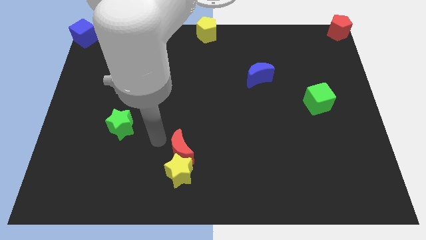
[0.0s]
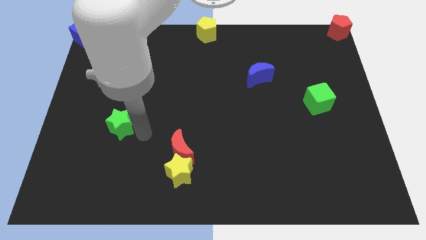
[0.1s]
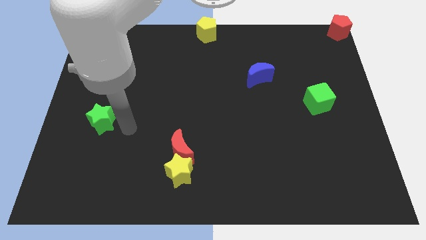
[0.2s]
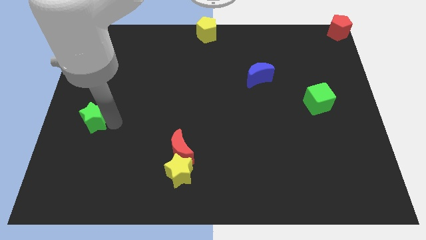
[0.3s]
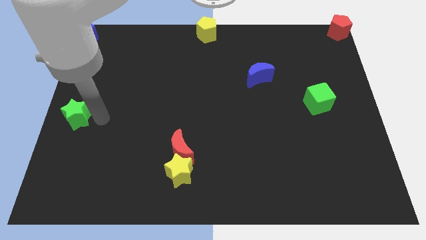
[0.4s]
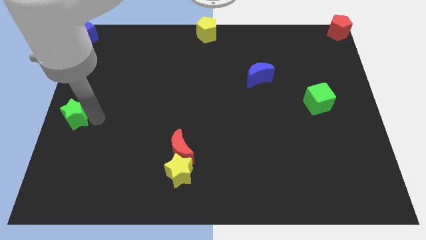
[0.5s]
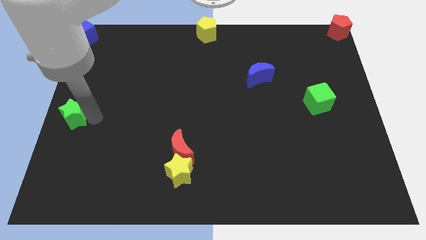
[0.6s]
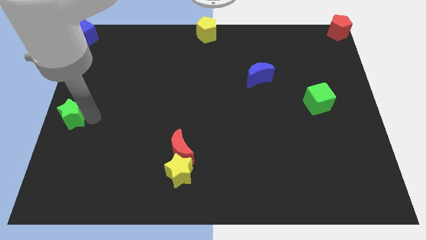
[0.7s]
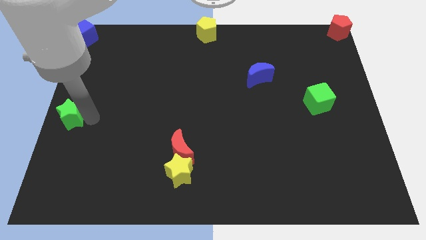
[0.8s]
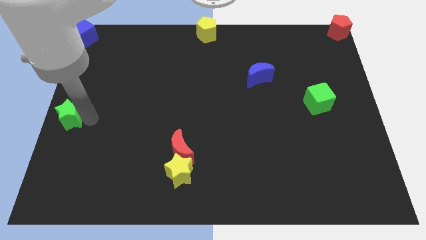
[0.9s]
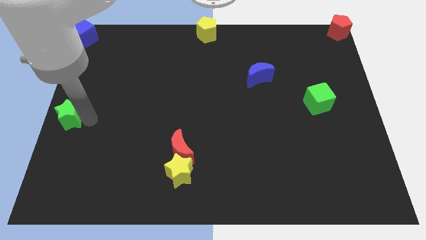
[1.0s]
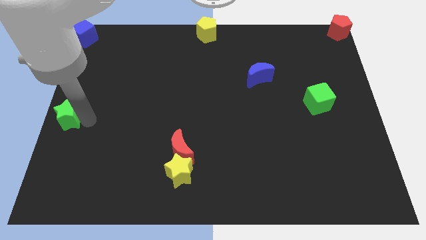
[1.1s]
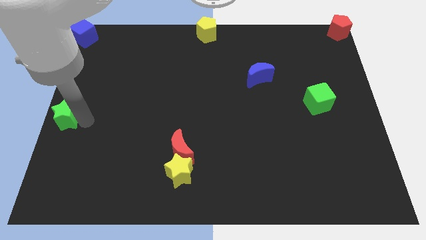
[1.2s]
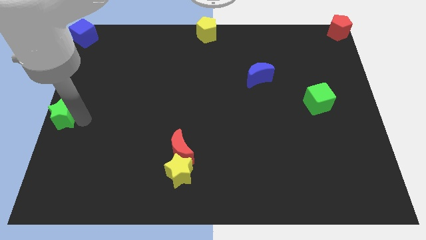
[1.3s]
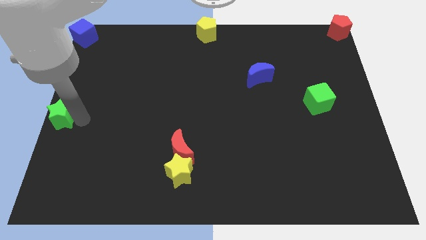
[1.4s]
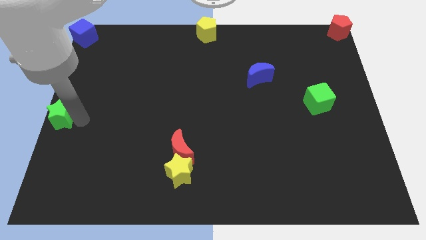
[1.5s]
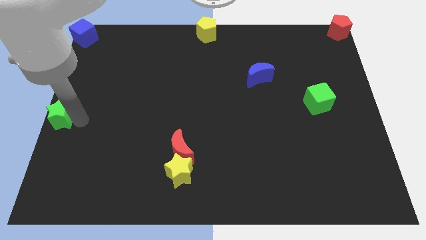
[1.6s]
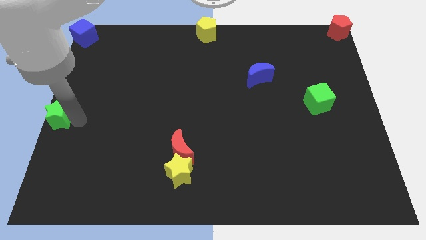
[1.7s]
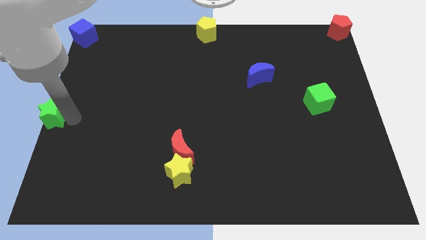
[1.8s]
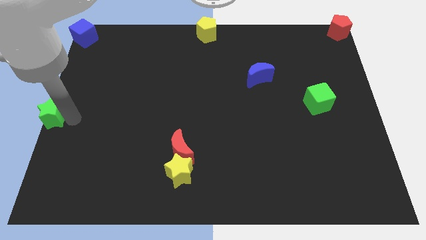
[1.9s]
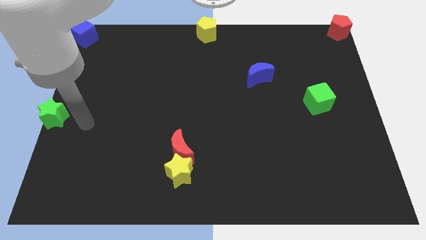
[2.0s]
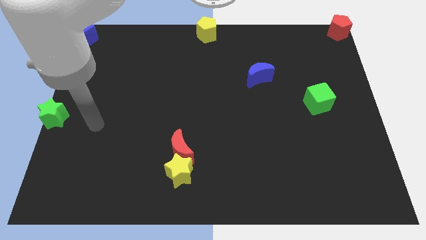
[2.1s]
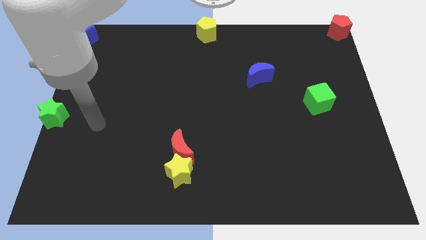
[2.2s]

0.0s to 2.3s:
push the green star to the center left of the board

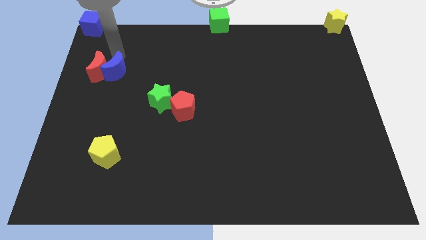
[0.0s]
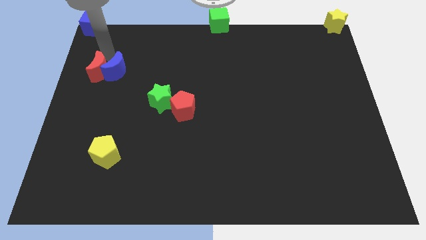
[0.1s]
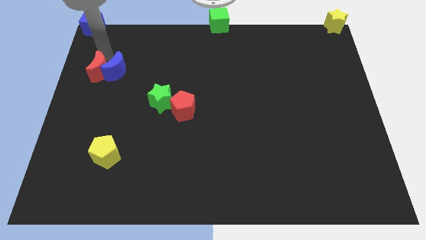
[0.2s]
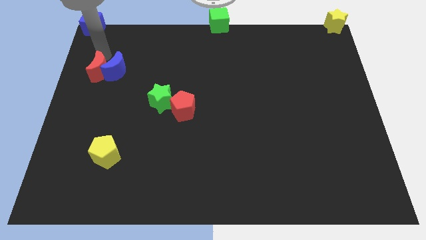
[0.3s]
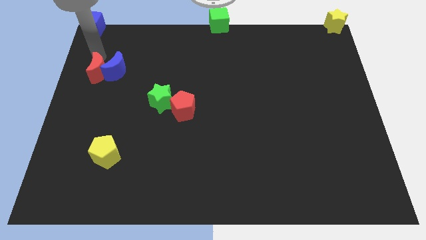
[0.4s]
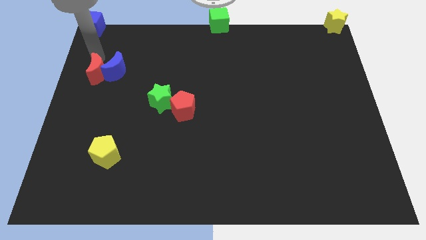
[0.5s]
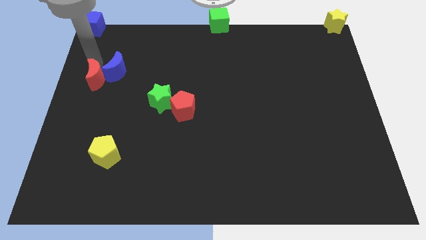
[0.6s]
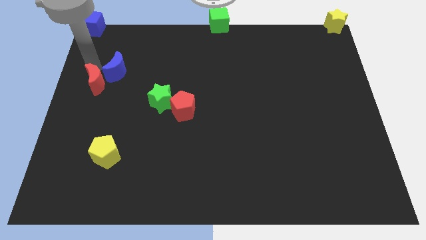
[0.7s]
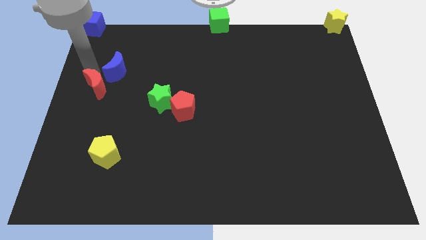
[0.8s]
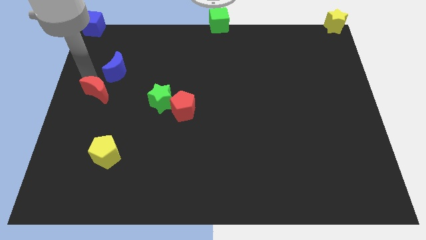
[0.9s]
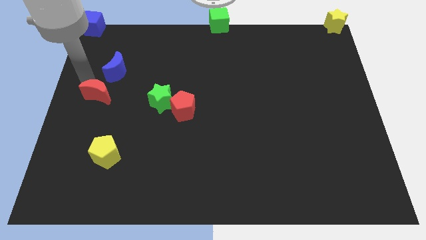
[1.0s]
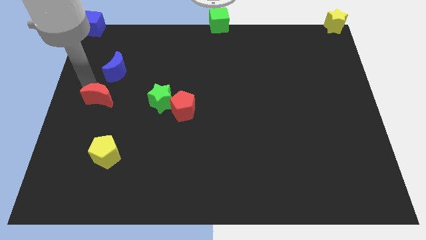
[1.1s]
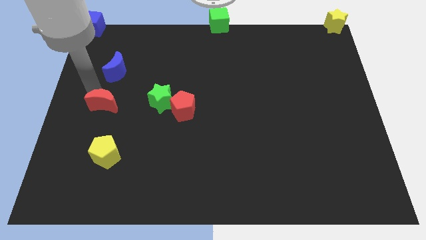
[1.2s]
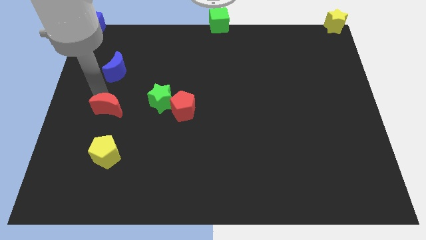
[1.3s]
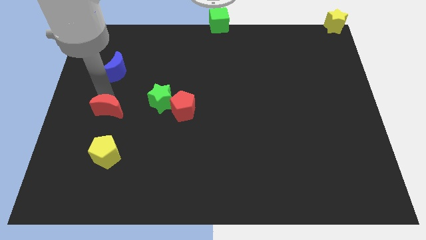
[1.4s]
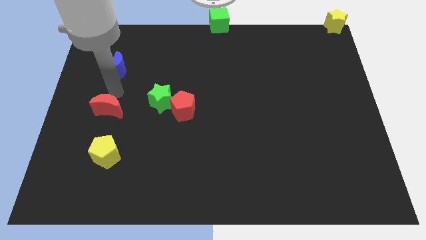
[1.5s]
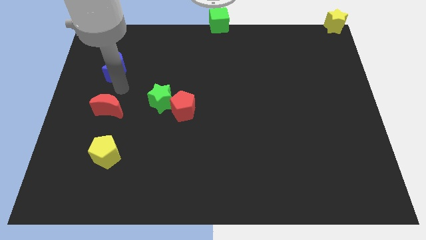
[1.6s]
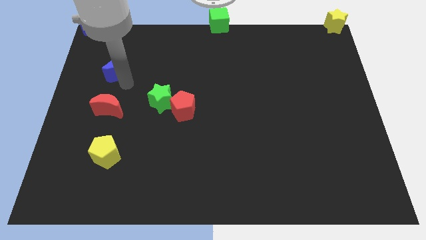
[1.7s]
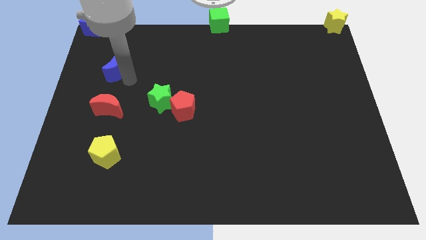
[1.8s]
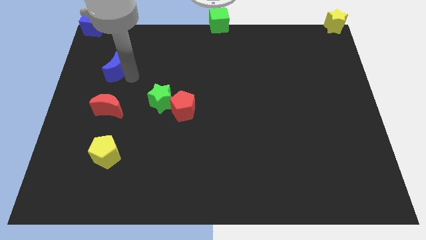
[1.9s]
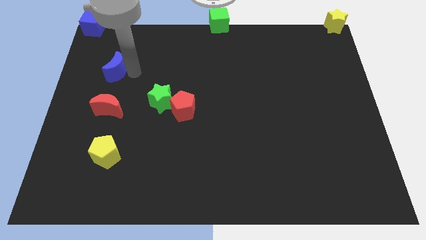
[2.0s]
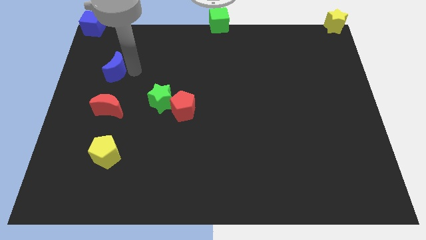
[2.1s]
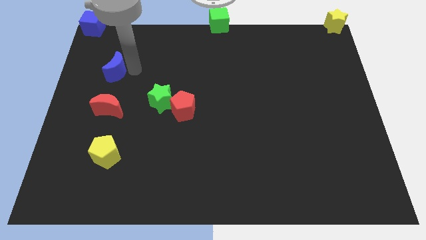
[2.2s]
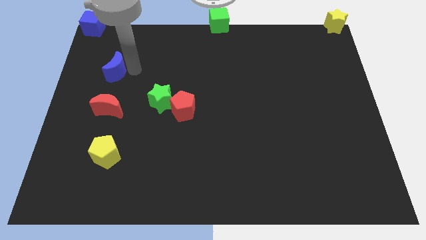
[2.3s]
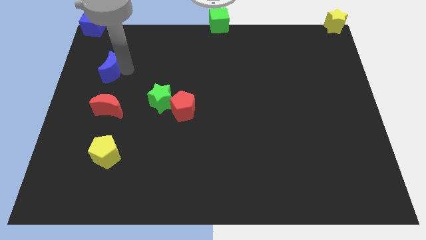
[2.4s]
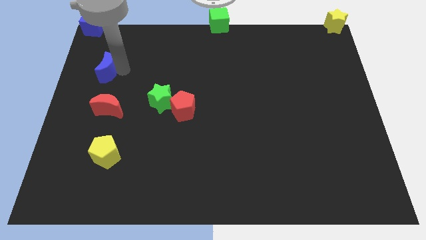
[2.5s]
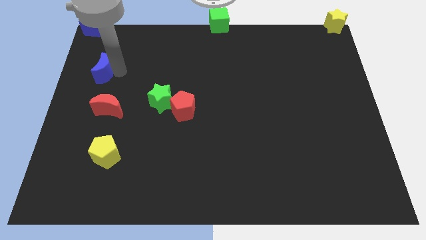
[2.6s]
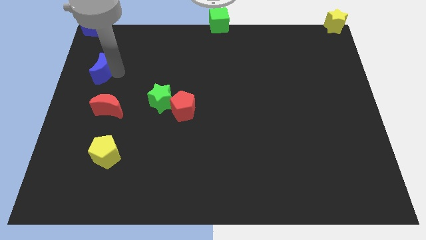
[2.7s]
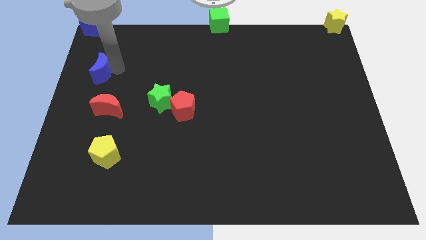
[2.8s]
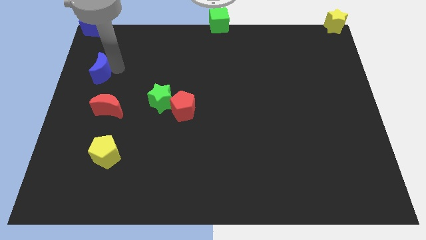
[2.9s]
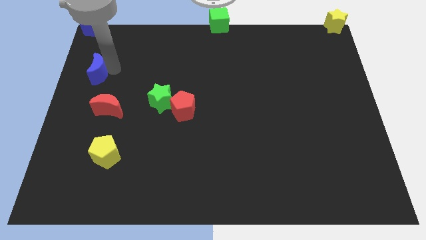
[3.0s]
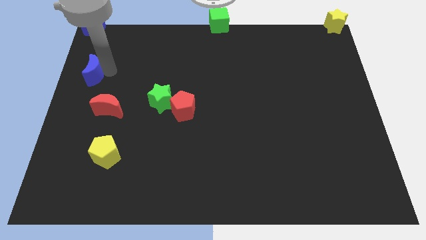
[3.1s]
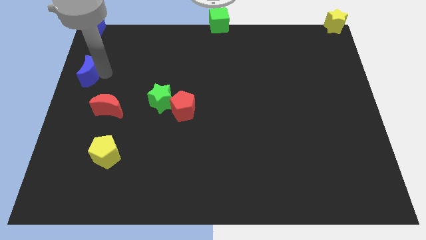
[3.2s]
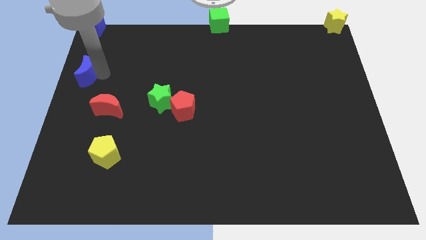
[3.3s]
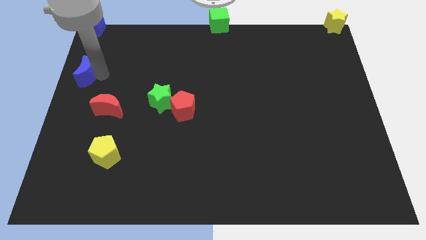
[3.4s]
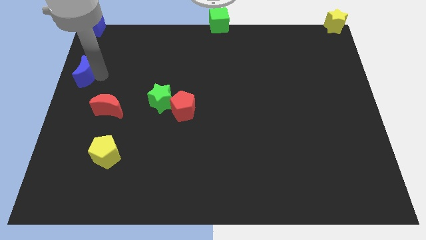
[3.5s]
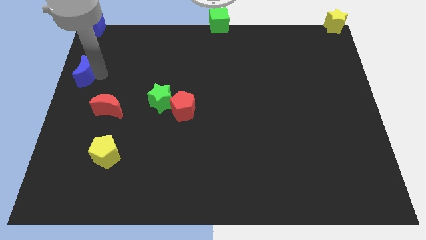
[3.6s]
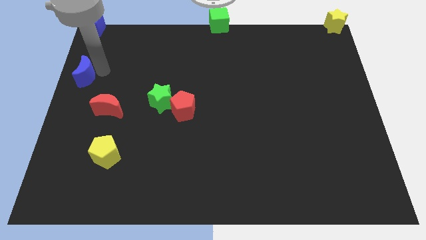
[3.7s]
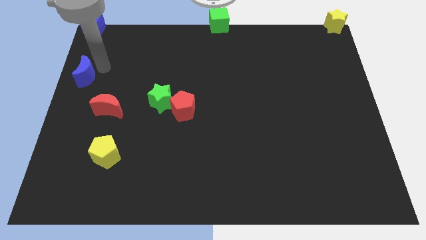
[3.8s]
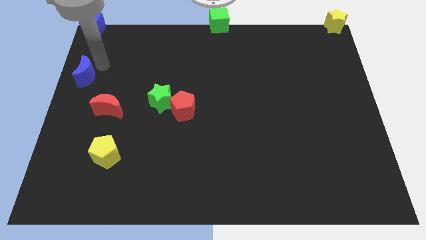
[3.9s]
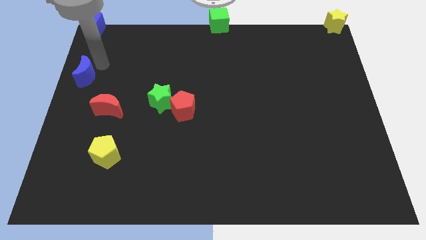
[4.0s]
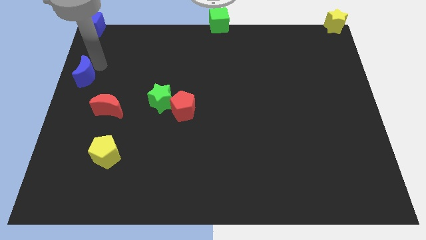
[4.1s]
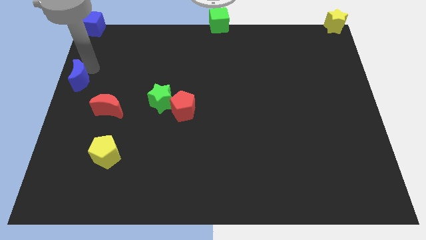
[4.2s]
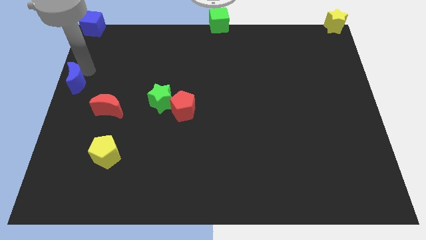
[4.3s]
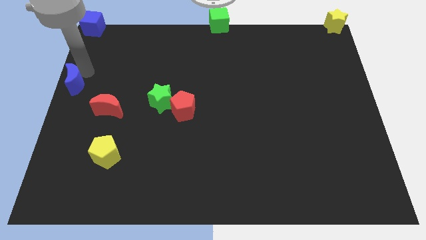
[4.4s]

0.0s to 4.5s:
drag the blue moon to the bottom of the blue cube

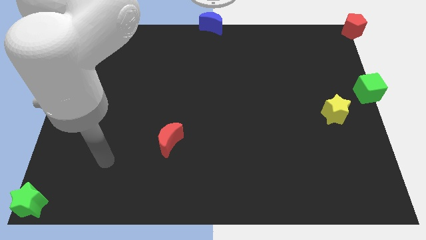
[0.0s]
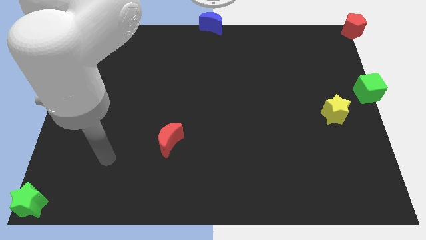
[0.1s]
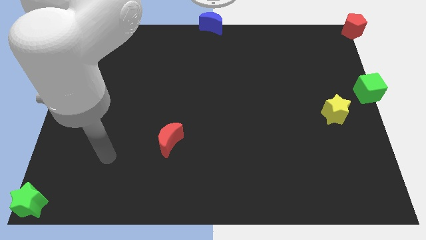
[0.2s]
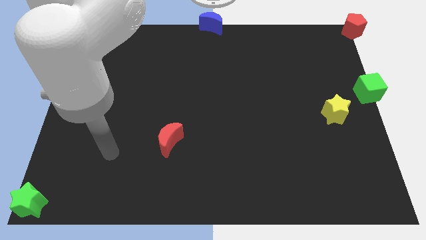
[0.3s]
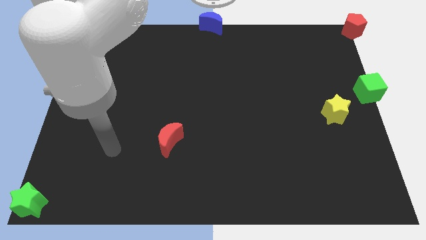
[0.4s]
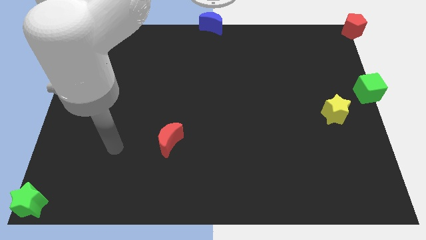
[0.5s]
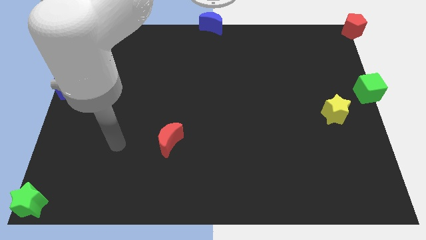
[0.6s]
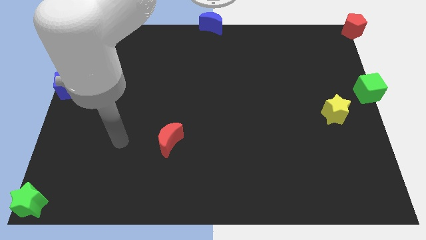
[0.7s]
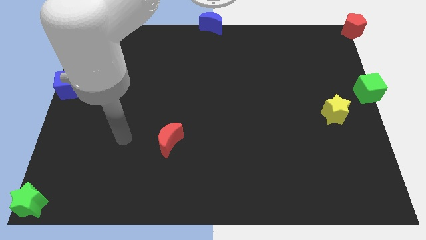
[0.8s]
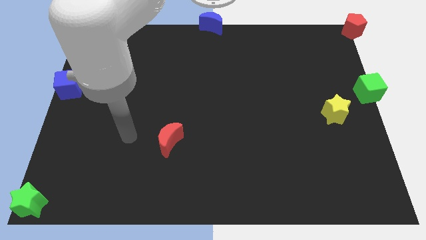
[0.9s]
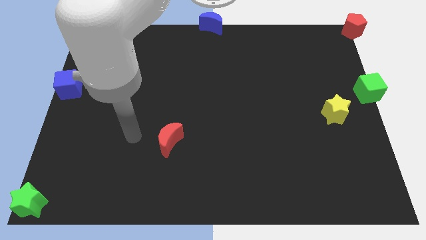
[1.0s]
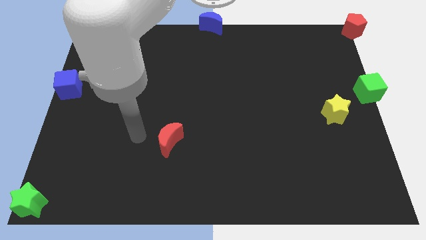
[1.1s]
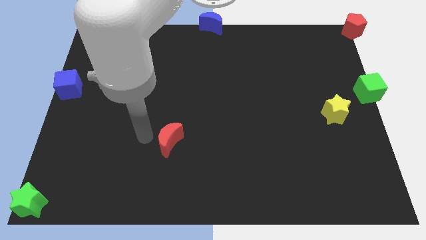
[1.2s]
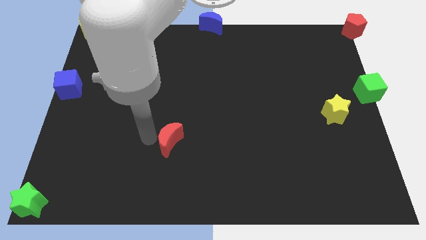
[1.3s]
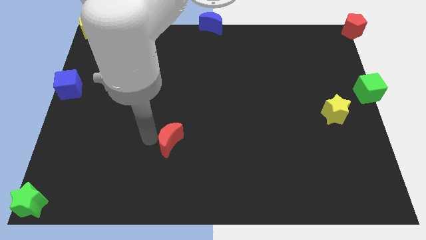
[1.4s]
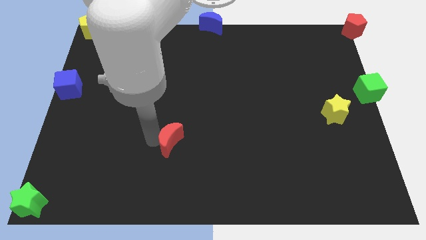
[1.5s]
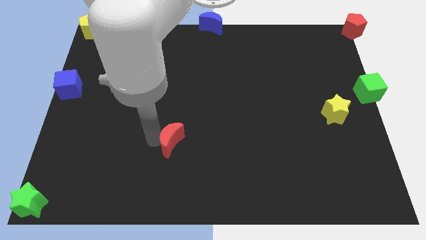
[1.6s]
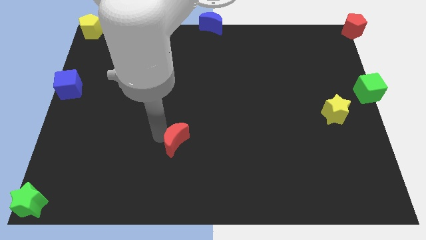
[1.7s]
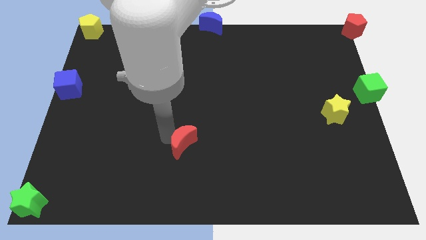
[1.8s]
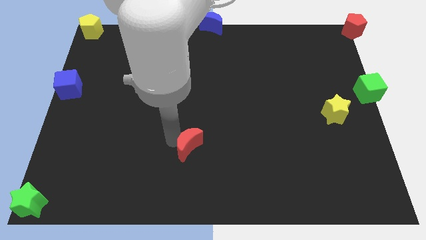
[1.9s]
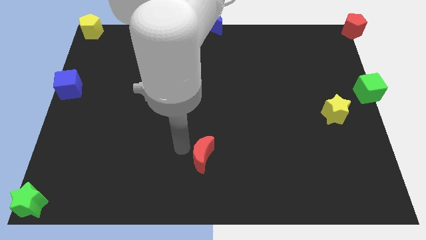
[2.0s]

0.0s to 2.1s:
slide the red moon slightly to the right side of the board

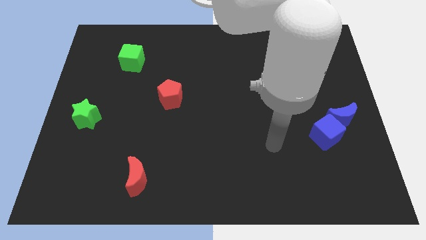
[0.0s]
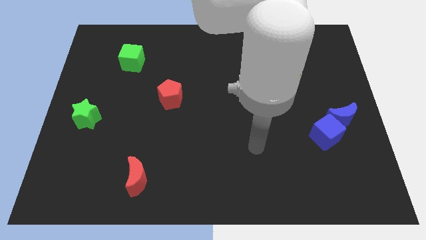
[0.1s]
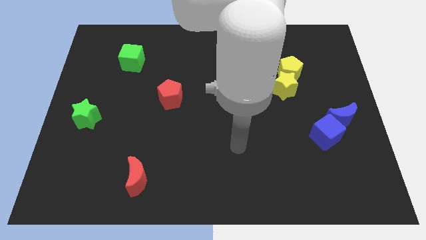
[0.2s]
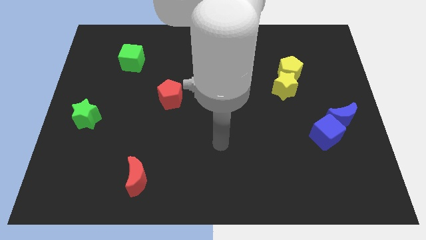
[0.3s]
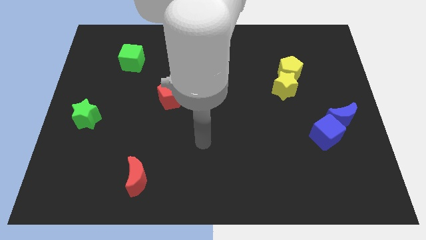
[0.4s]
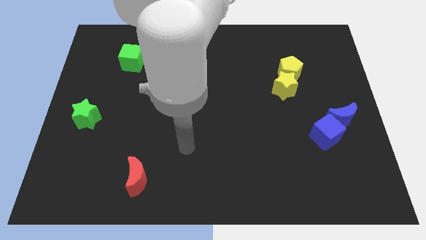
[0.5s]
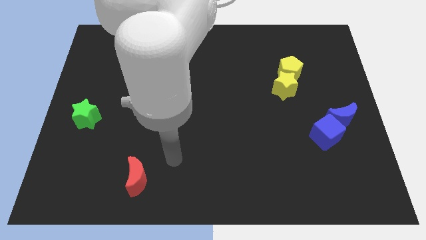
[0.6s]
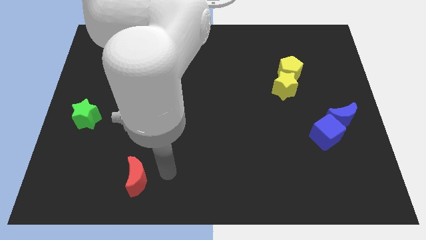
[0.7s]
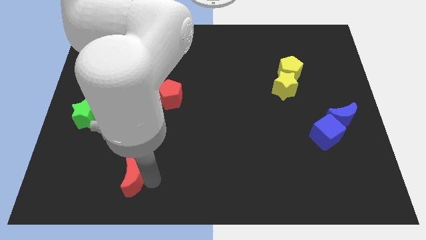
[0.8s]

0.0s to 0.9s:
move the arm to the right of the red moon
